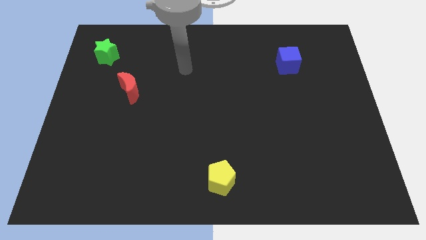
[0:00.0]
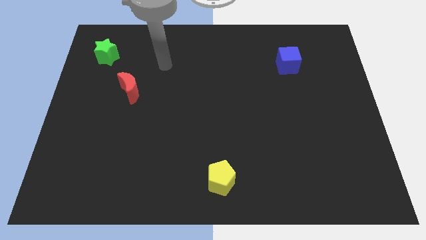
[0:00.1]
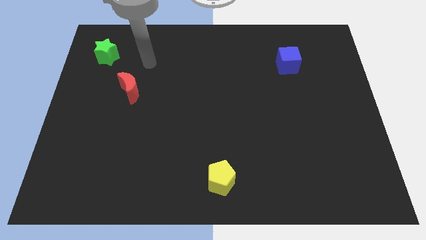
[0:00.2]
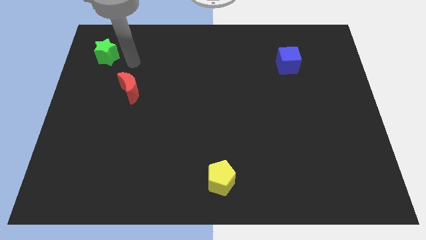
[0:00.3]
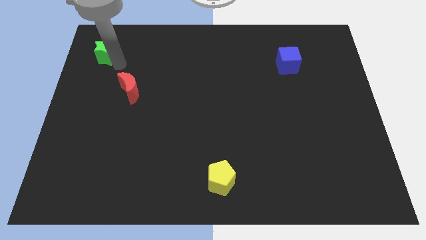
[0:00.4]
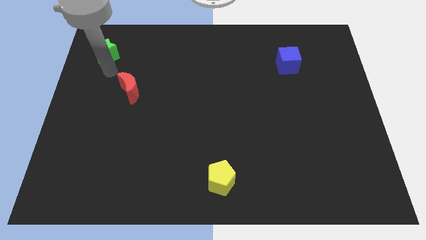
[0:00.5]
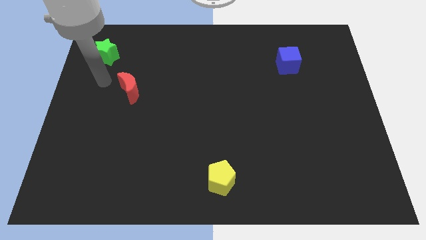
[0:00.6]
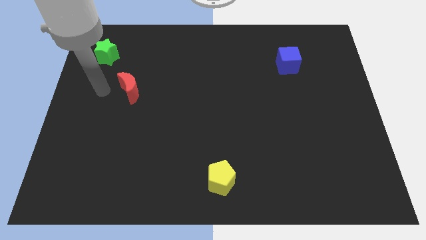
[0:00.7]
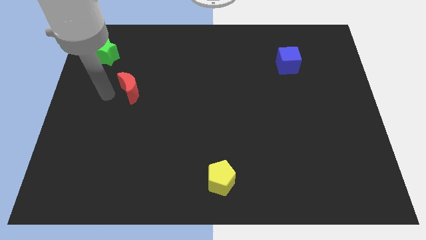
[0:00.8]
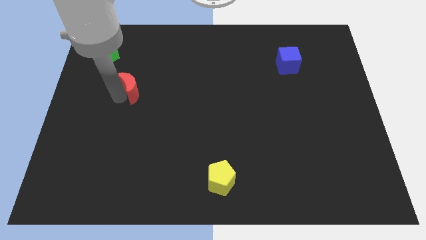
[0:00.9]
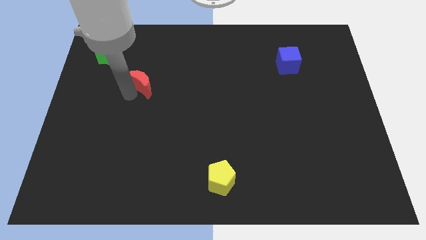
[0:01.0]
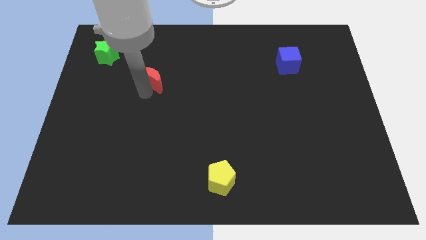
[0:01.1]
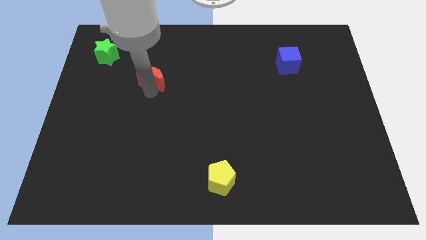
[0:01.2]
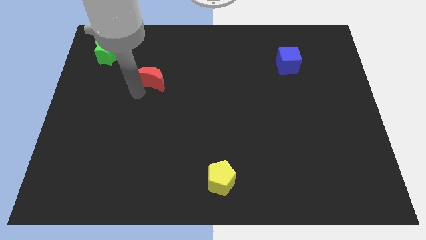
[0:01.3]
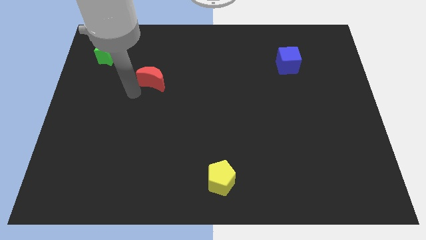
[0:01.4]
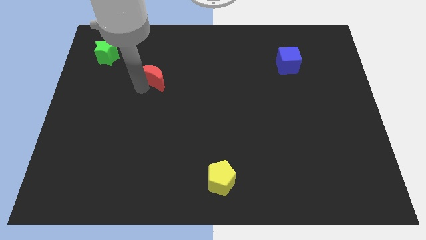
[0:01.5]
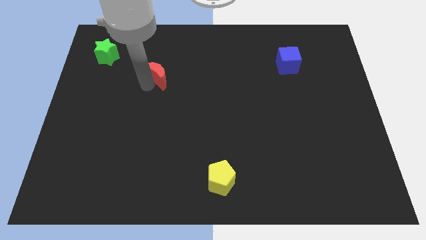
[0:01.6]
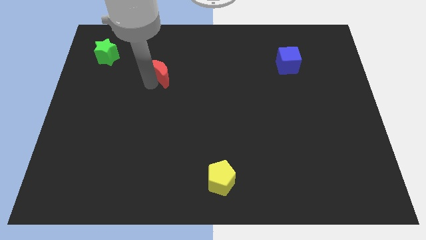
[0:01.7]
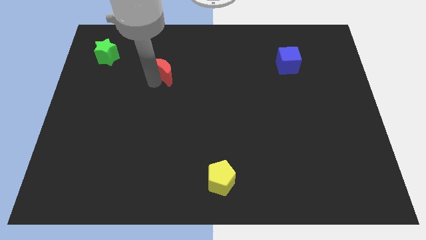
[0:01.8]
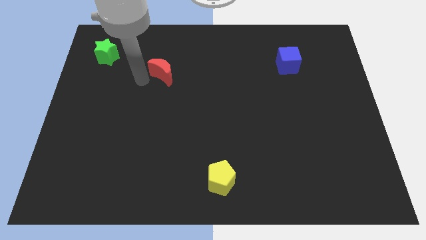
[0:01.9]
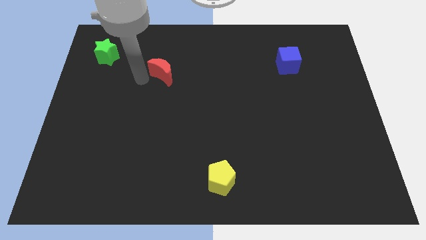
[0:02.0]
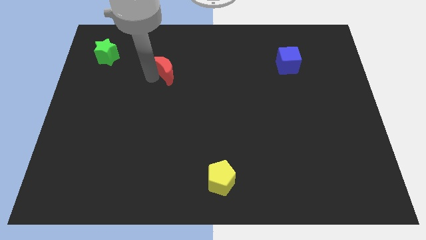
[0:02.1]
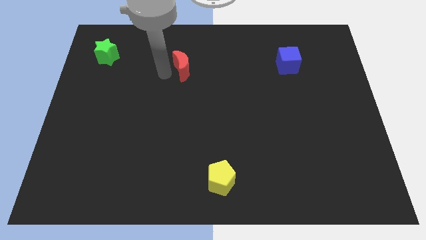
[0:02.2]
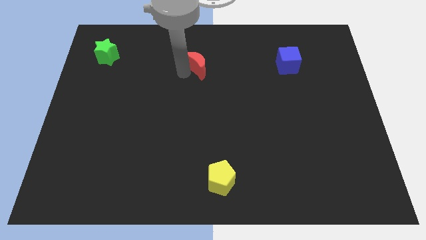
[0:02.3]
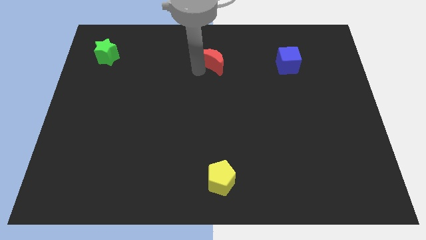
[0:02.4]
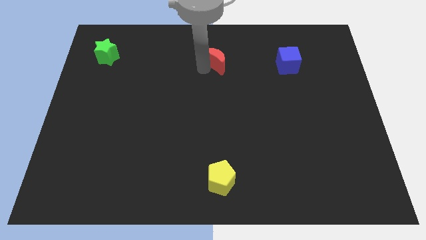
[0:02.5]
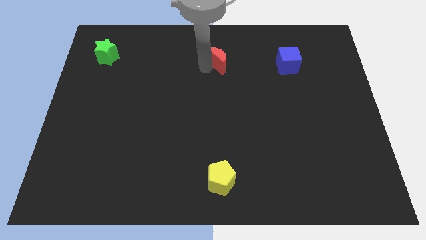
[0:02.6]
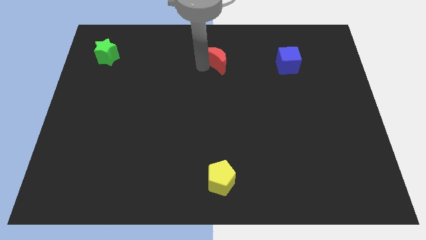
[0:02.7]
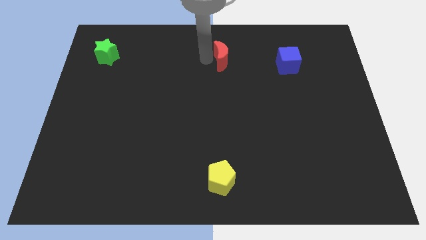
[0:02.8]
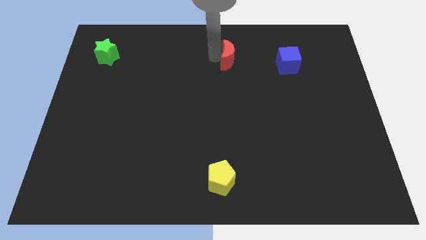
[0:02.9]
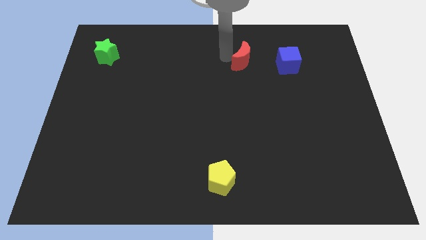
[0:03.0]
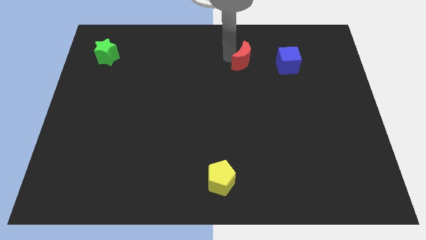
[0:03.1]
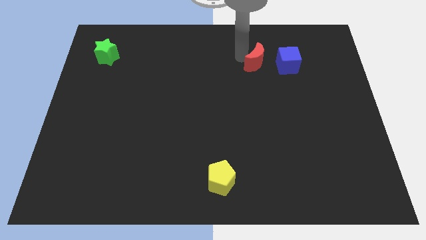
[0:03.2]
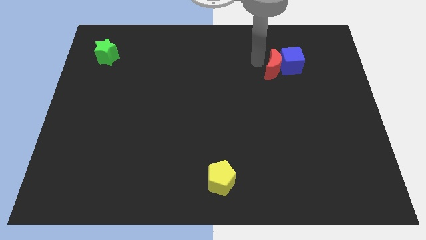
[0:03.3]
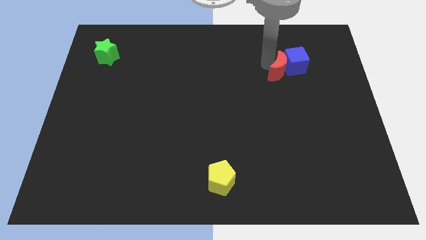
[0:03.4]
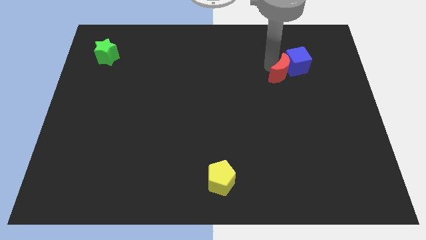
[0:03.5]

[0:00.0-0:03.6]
push the red block next to the blue cube

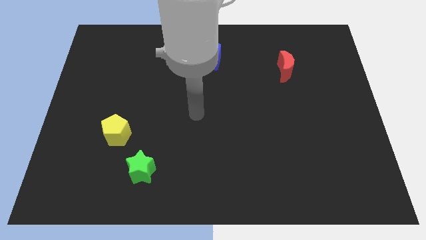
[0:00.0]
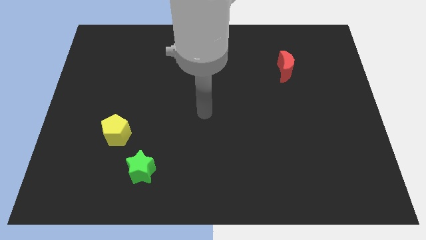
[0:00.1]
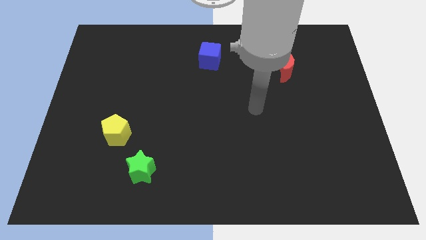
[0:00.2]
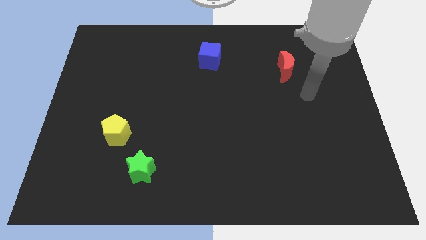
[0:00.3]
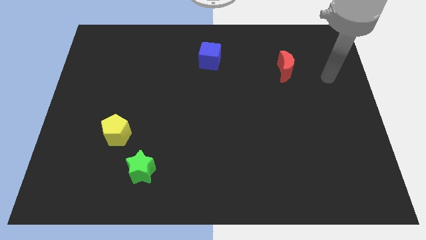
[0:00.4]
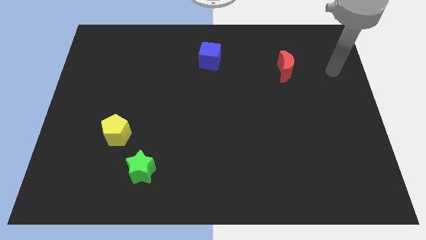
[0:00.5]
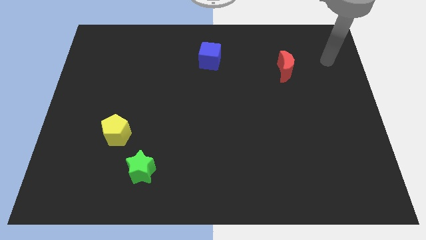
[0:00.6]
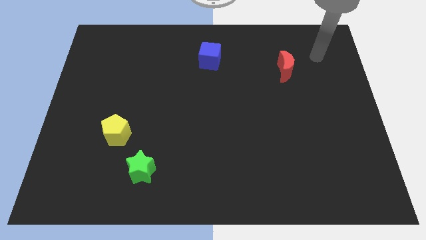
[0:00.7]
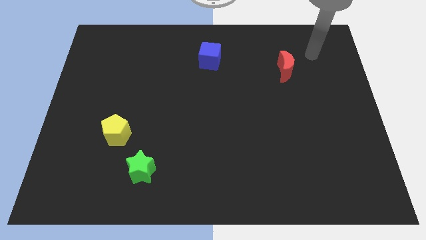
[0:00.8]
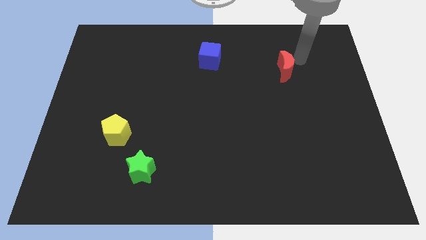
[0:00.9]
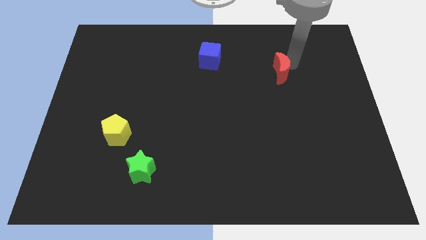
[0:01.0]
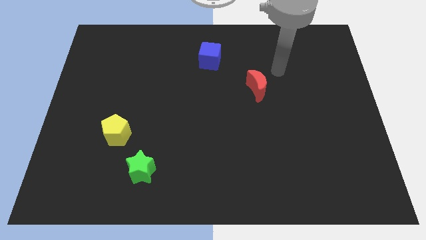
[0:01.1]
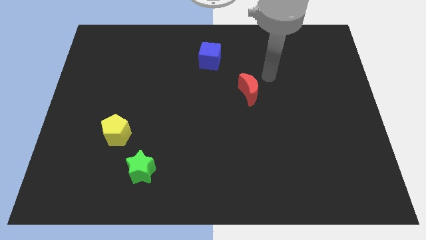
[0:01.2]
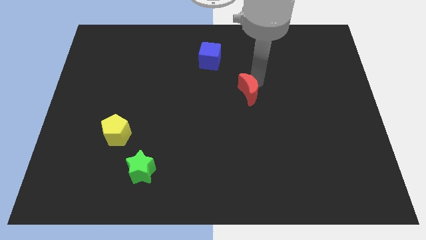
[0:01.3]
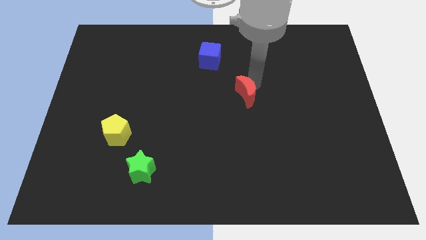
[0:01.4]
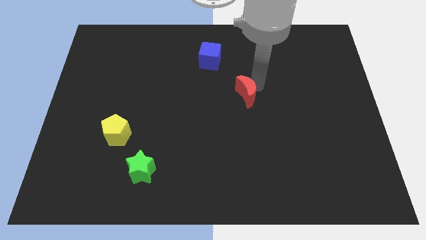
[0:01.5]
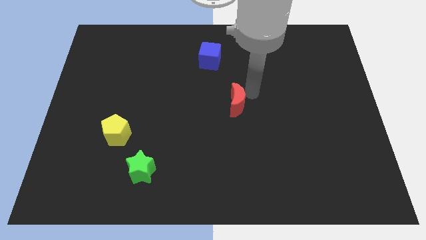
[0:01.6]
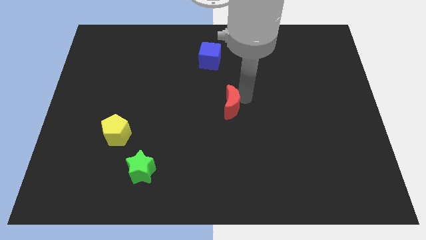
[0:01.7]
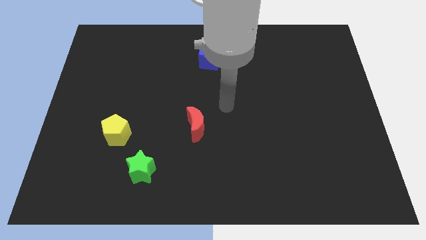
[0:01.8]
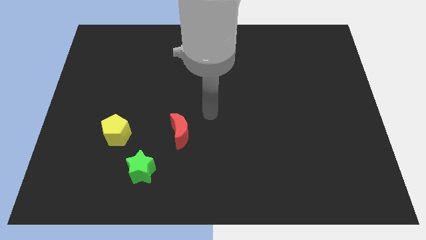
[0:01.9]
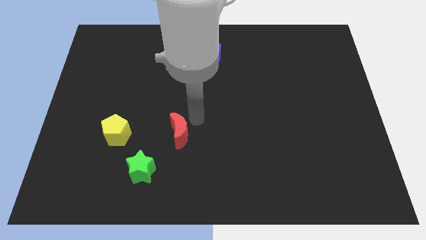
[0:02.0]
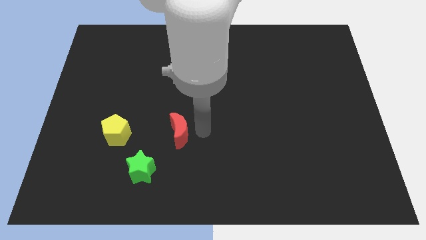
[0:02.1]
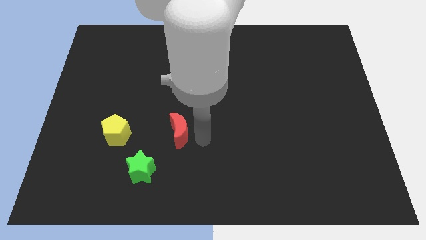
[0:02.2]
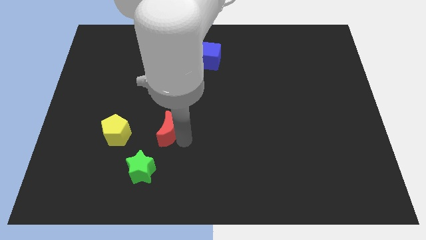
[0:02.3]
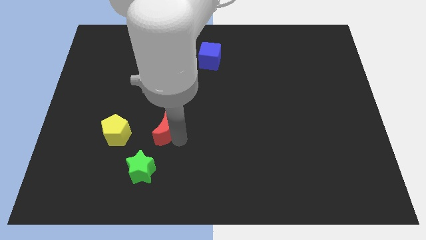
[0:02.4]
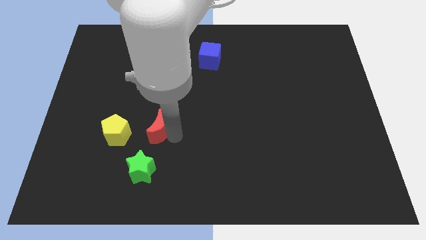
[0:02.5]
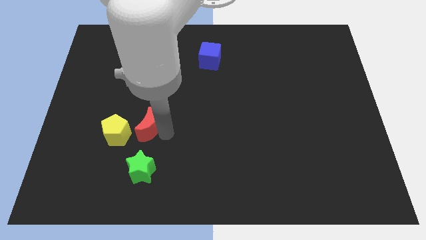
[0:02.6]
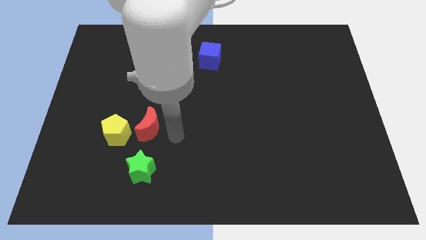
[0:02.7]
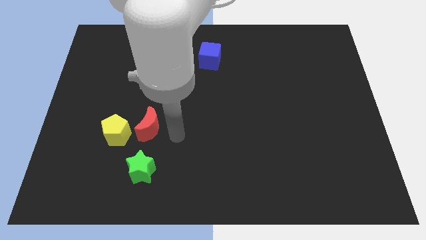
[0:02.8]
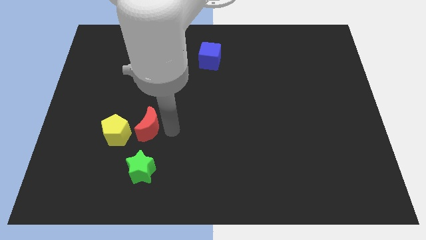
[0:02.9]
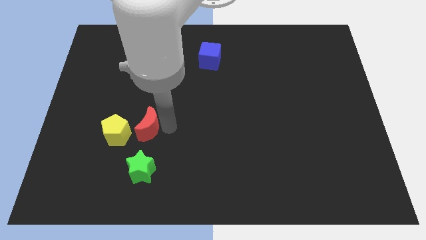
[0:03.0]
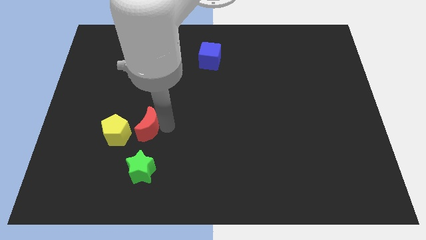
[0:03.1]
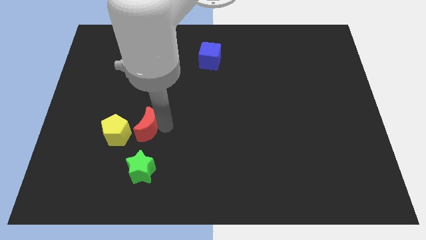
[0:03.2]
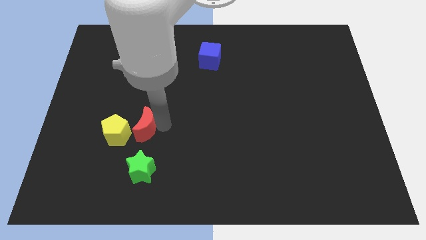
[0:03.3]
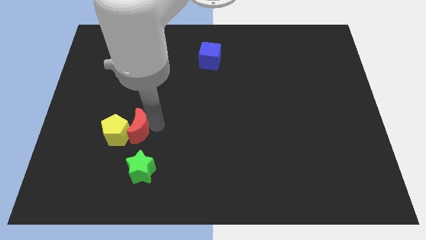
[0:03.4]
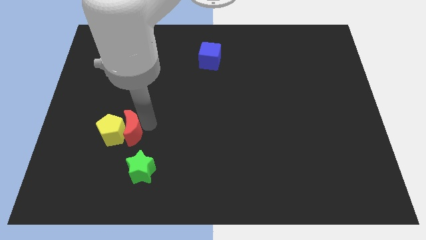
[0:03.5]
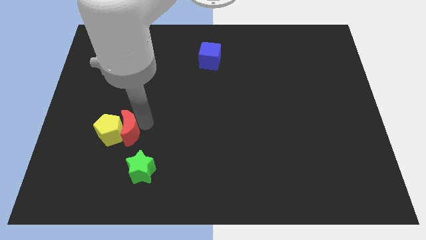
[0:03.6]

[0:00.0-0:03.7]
move the moon to the yellow block

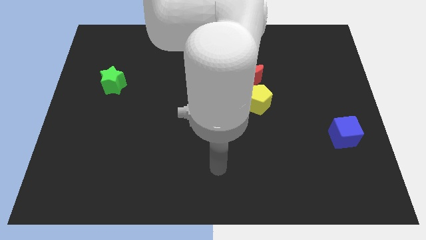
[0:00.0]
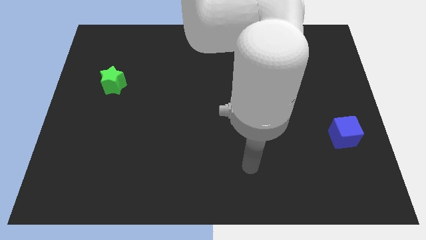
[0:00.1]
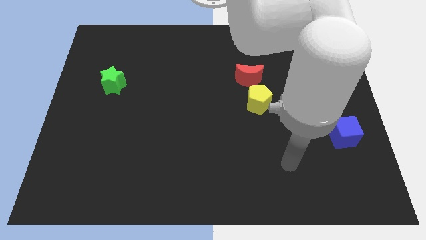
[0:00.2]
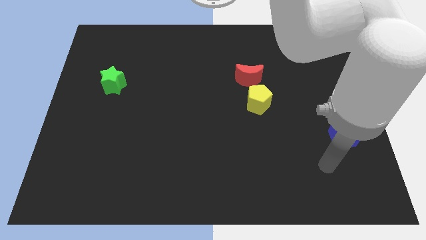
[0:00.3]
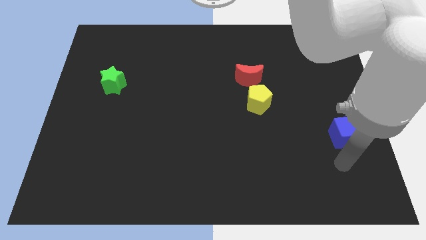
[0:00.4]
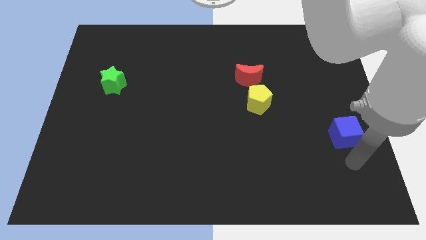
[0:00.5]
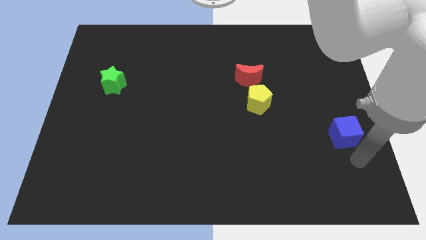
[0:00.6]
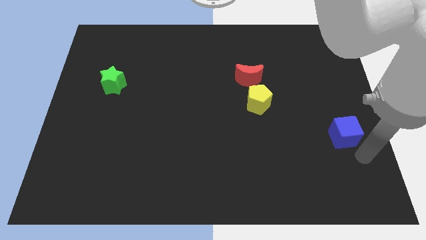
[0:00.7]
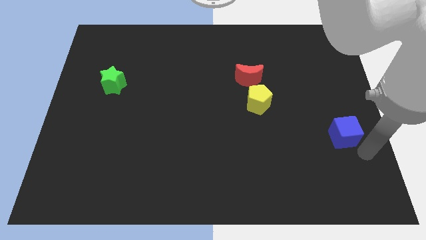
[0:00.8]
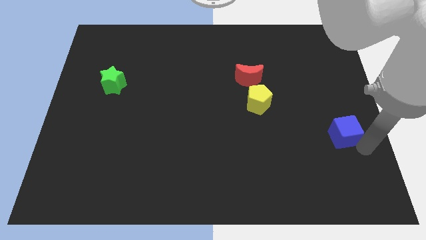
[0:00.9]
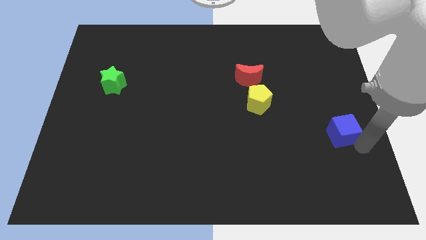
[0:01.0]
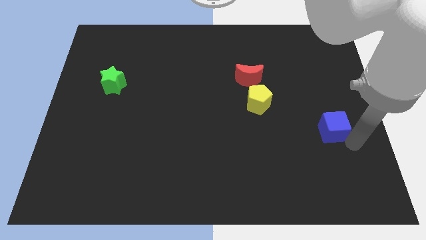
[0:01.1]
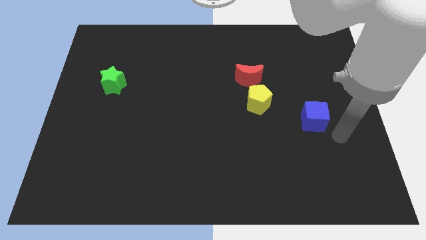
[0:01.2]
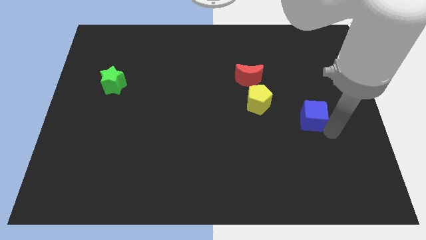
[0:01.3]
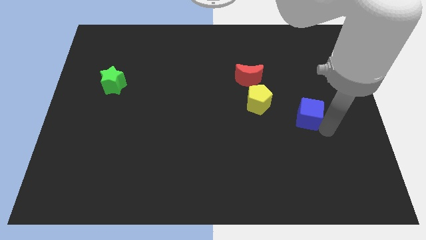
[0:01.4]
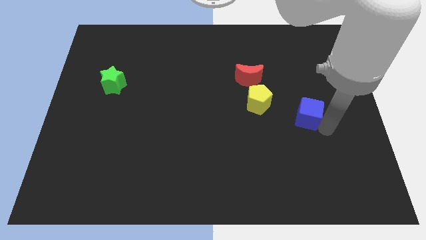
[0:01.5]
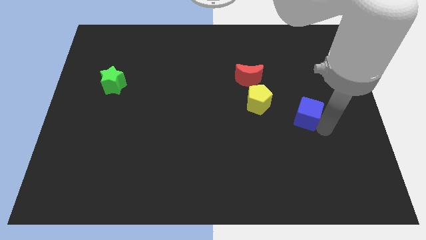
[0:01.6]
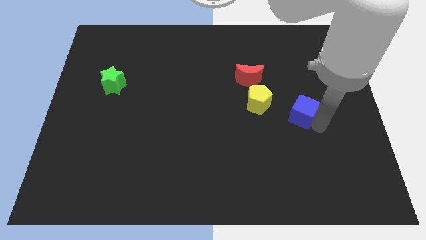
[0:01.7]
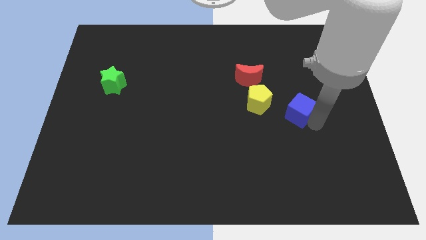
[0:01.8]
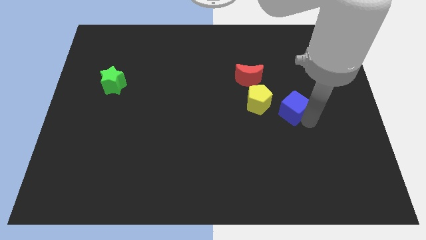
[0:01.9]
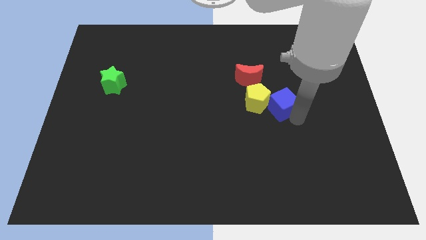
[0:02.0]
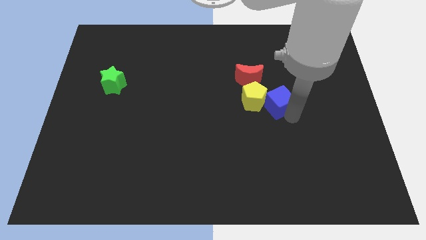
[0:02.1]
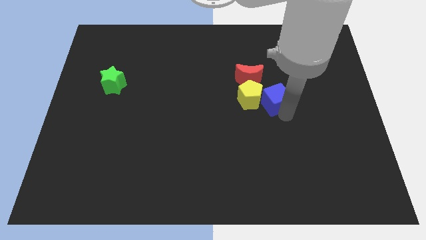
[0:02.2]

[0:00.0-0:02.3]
put the blue cube towards the yellow pentagon
